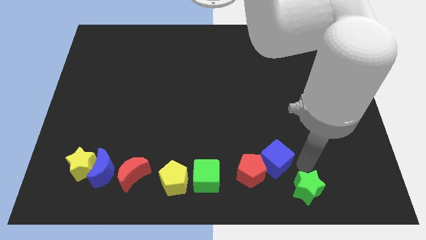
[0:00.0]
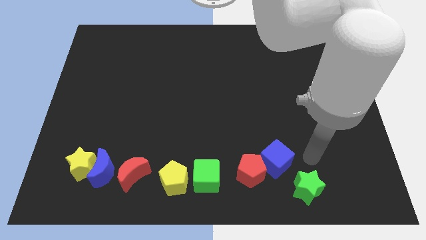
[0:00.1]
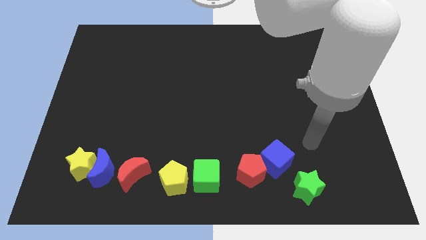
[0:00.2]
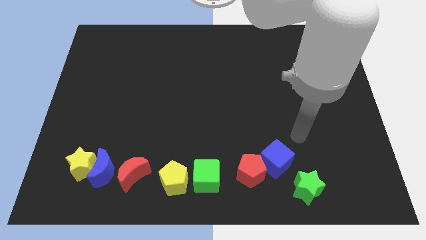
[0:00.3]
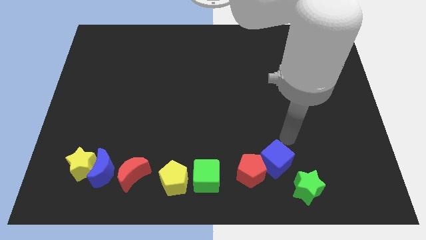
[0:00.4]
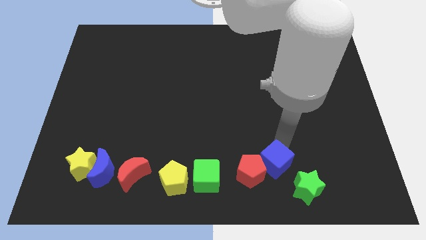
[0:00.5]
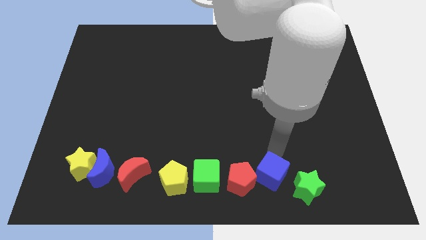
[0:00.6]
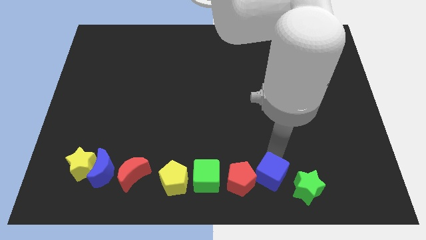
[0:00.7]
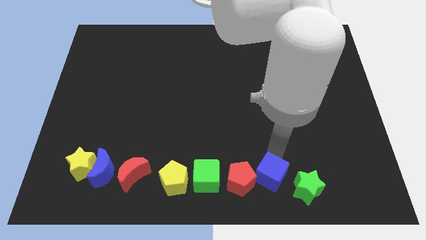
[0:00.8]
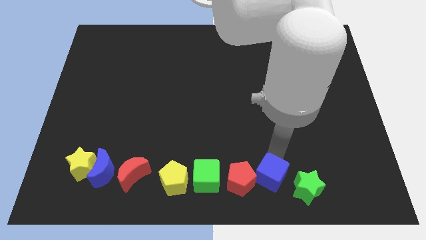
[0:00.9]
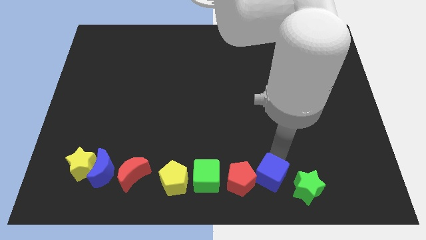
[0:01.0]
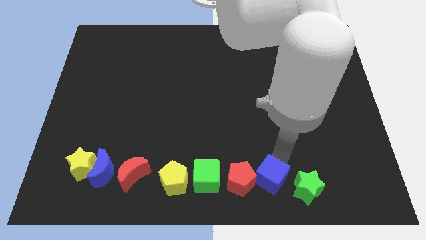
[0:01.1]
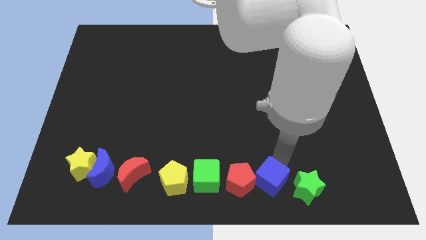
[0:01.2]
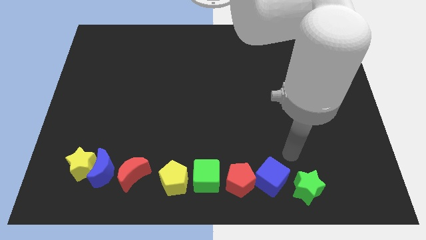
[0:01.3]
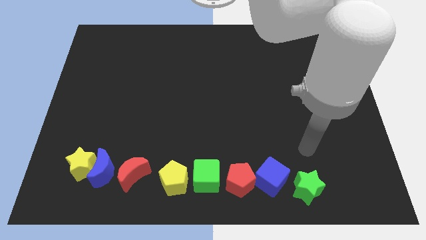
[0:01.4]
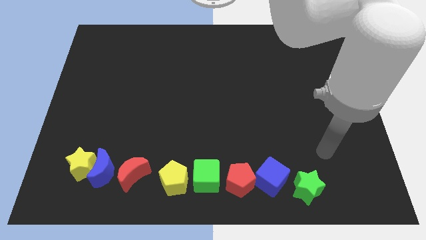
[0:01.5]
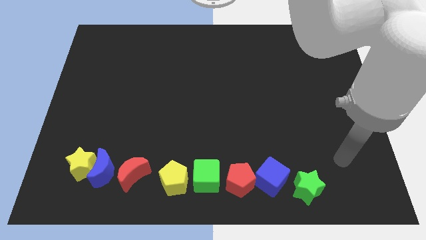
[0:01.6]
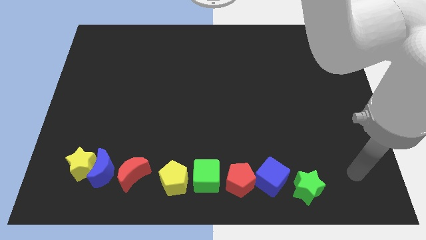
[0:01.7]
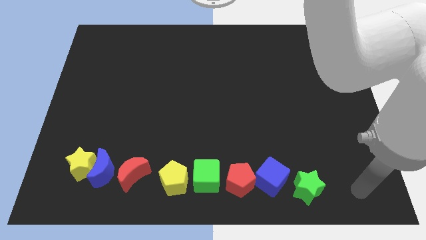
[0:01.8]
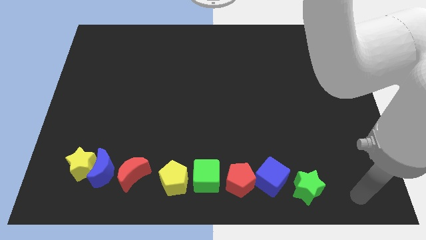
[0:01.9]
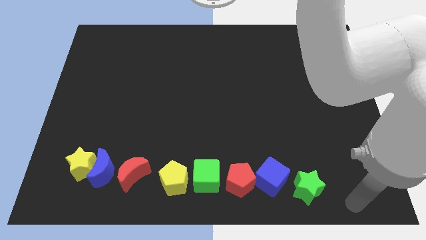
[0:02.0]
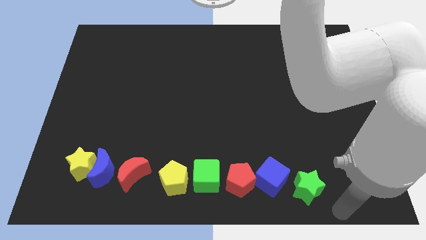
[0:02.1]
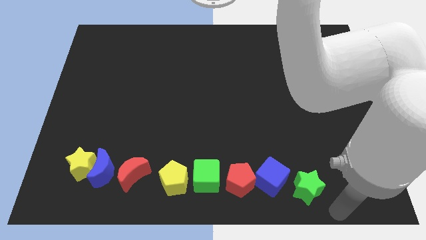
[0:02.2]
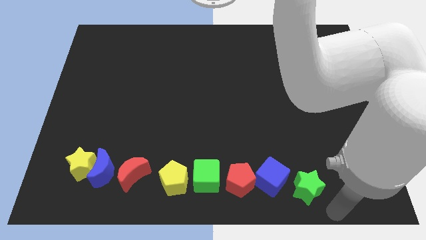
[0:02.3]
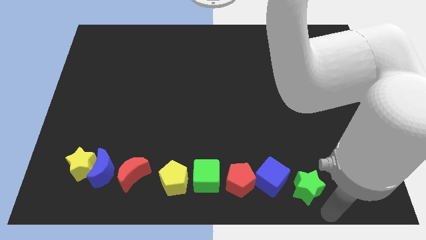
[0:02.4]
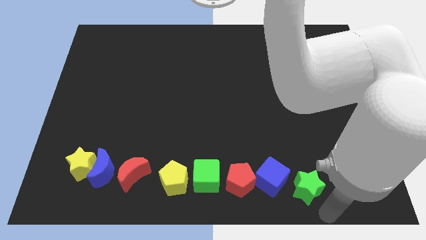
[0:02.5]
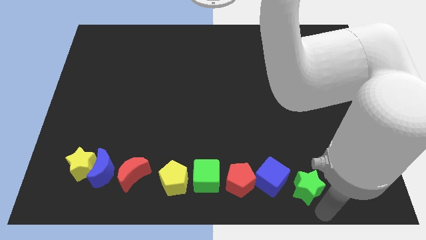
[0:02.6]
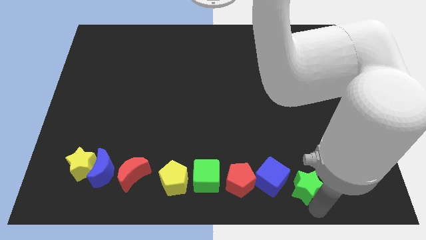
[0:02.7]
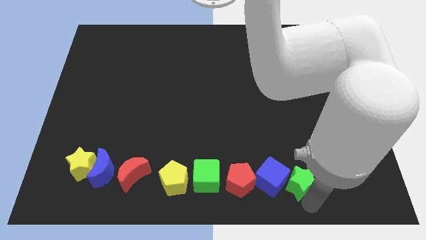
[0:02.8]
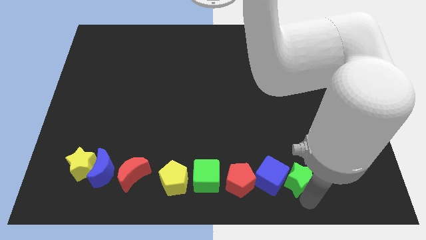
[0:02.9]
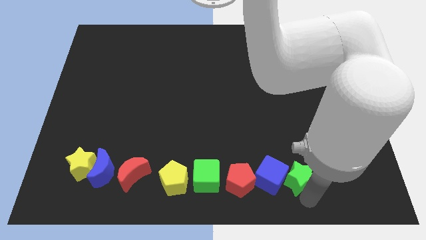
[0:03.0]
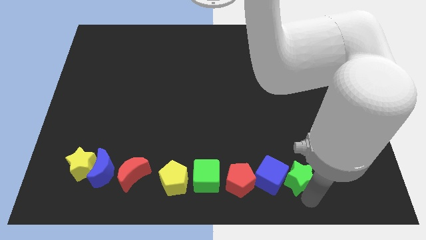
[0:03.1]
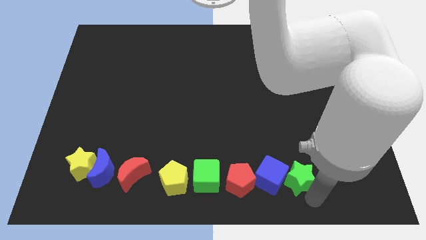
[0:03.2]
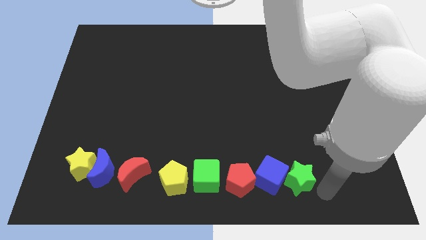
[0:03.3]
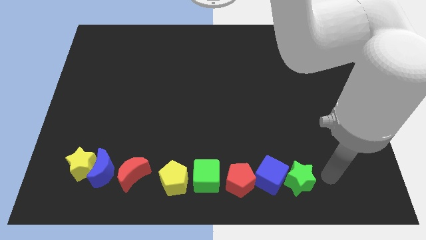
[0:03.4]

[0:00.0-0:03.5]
adjust the green star and blue cube to the rigth of the red pentagon

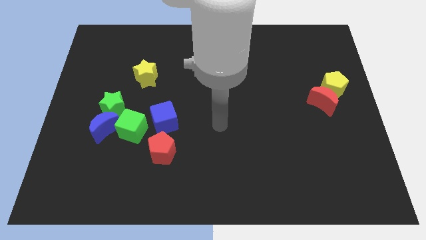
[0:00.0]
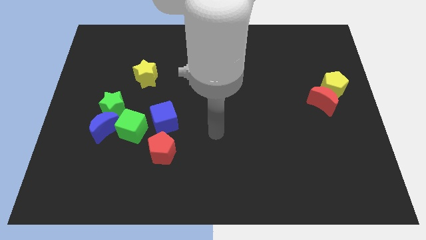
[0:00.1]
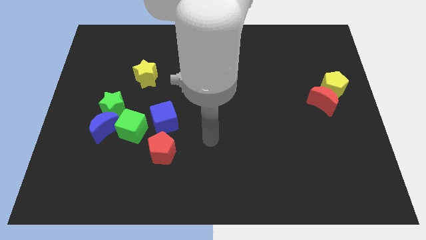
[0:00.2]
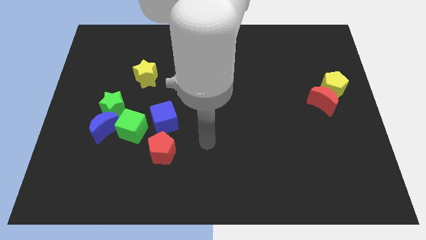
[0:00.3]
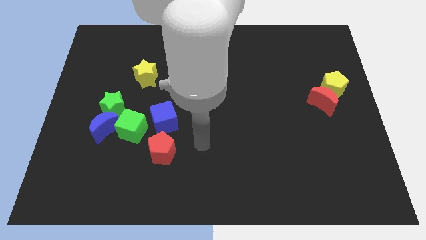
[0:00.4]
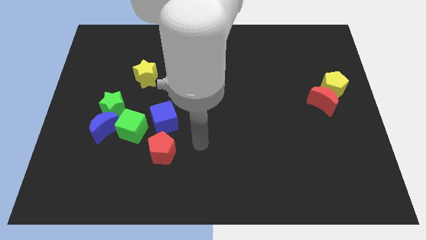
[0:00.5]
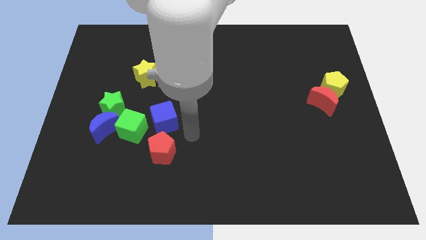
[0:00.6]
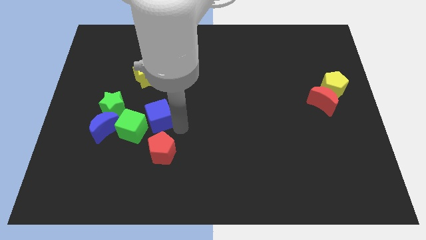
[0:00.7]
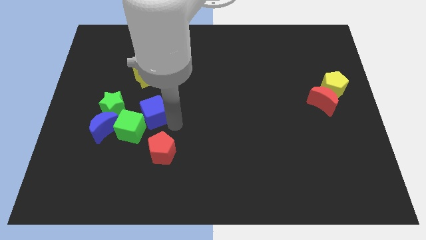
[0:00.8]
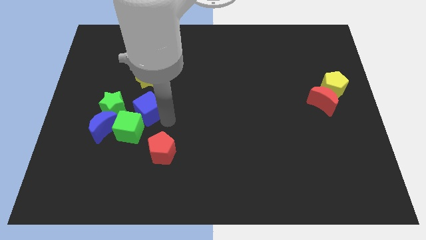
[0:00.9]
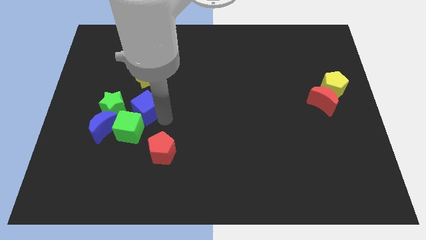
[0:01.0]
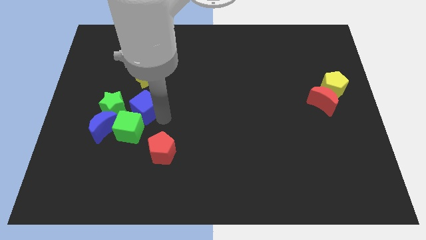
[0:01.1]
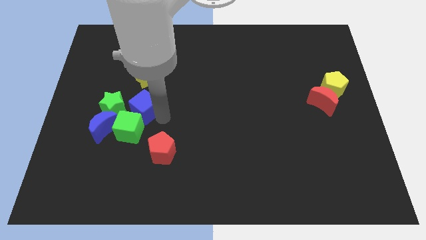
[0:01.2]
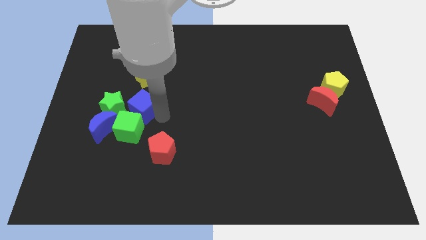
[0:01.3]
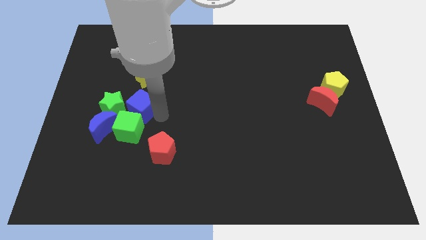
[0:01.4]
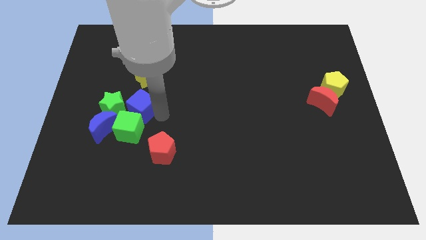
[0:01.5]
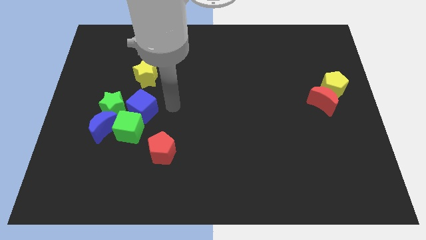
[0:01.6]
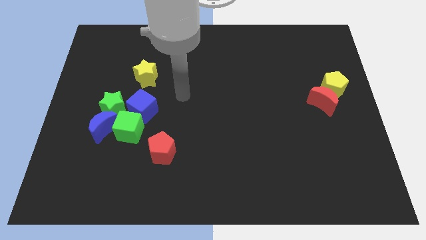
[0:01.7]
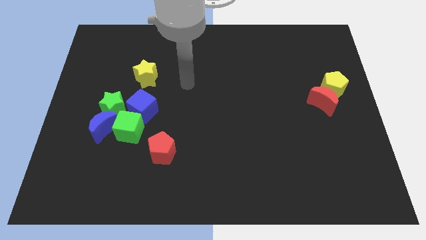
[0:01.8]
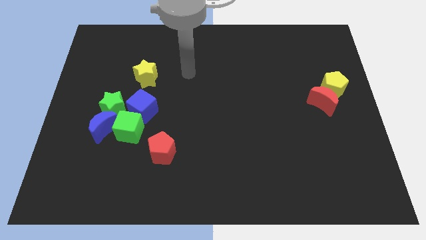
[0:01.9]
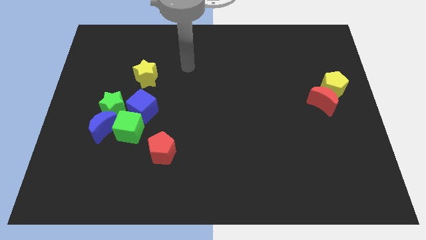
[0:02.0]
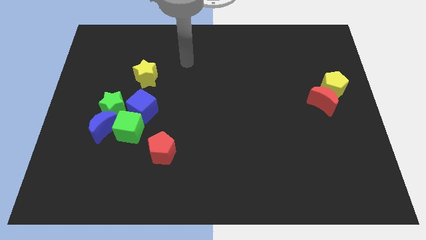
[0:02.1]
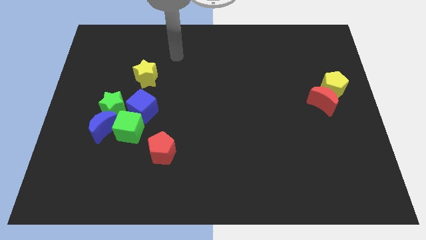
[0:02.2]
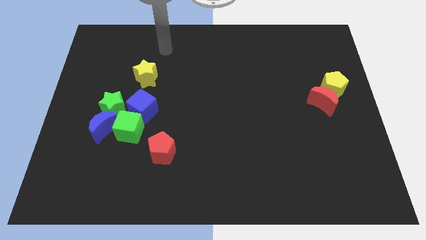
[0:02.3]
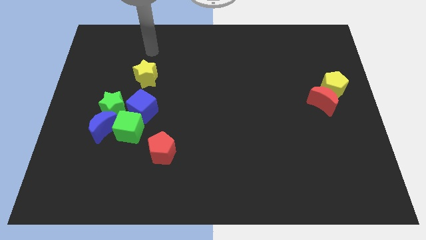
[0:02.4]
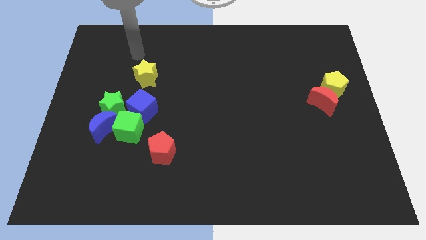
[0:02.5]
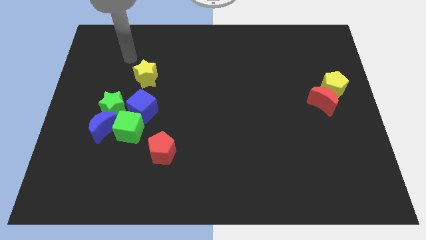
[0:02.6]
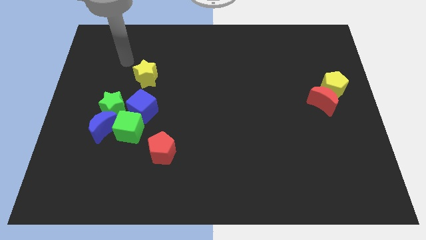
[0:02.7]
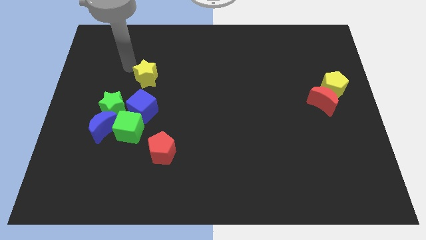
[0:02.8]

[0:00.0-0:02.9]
move blue cube right beside the green star

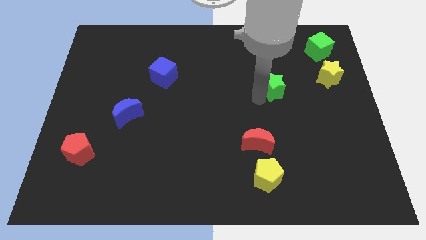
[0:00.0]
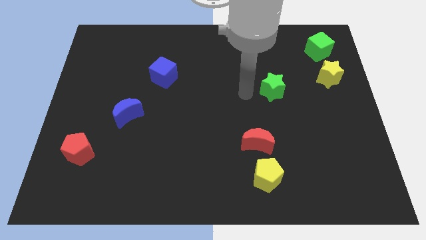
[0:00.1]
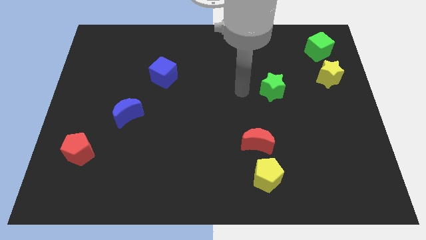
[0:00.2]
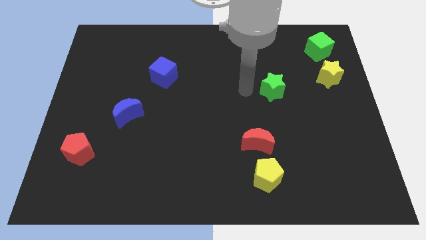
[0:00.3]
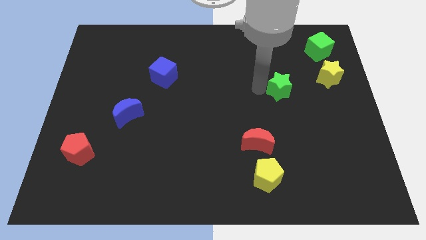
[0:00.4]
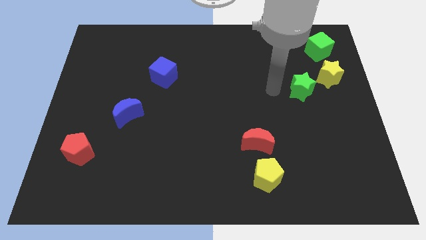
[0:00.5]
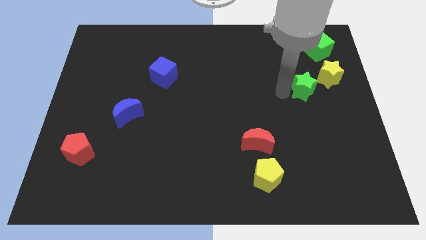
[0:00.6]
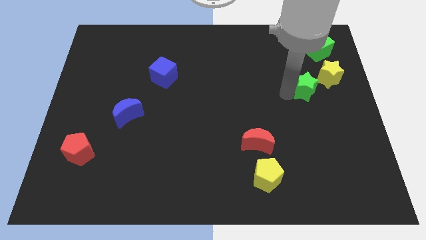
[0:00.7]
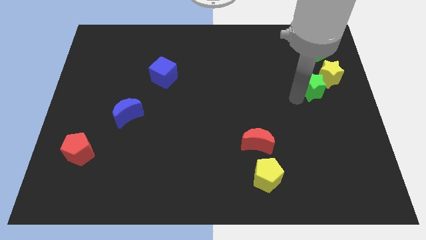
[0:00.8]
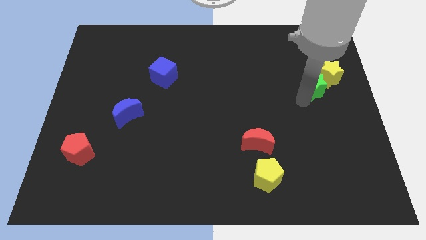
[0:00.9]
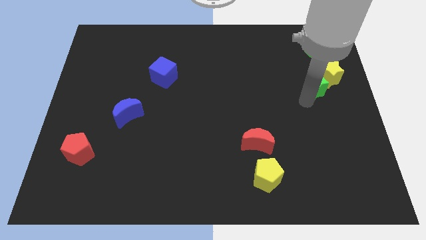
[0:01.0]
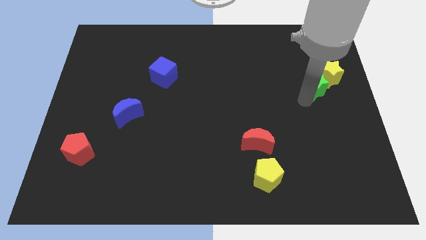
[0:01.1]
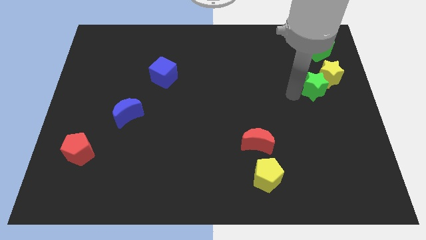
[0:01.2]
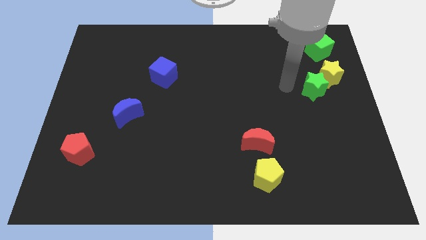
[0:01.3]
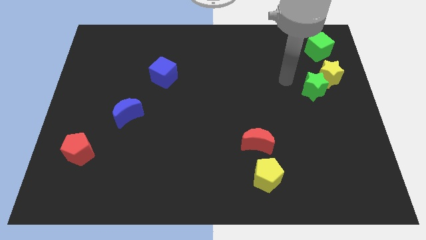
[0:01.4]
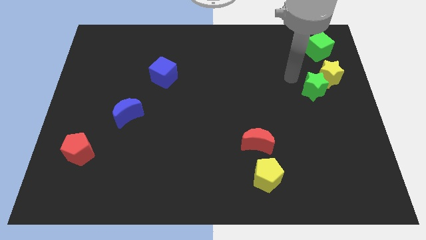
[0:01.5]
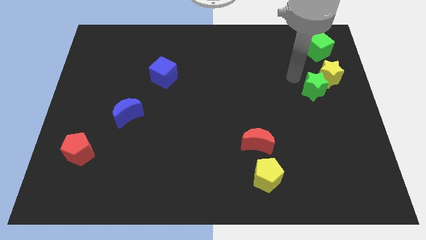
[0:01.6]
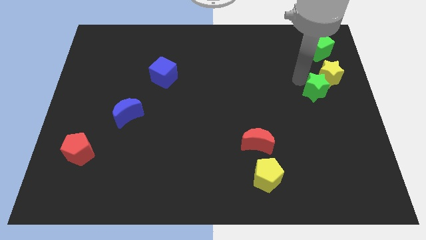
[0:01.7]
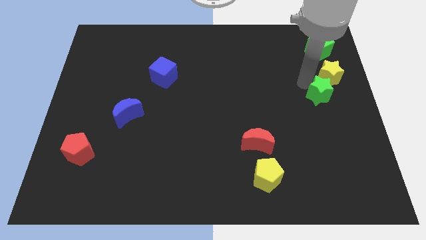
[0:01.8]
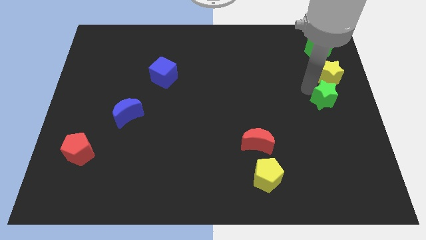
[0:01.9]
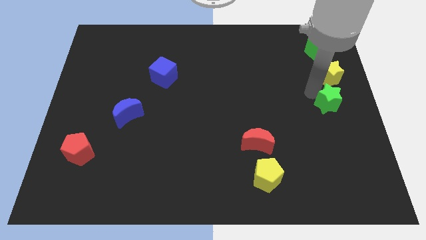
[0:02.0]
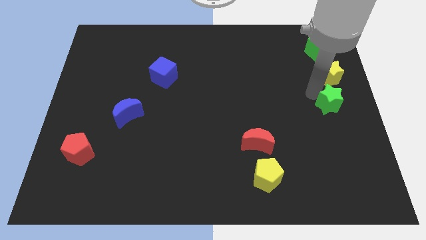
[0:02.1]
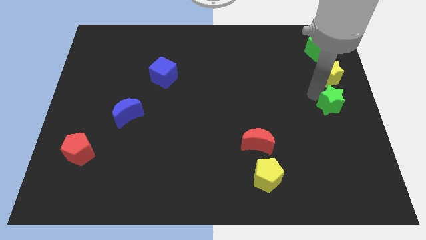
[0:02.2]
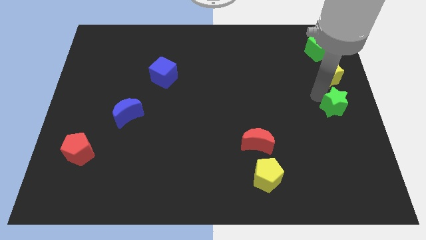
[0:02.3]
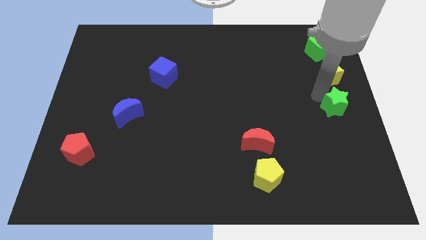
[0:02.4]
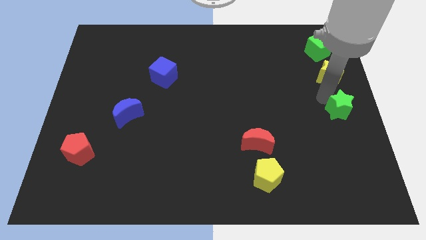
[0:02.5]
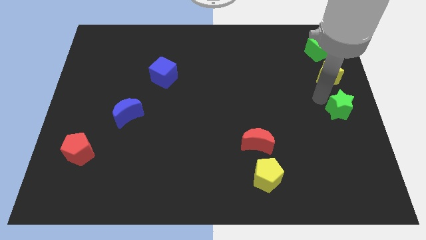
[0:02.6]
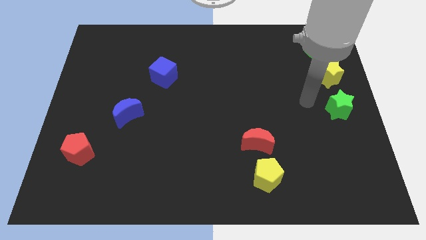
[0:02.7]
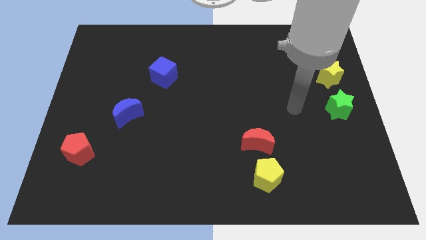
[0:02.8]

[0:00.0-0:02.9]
place the green star to the bottom of the yellow star
